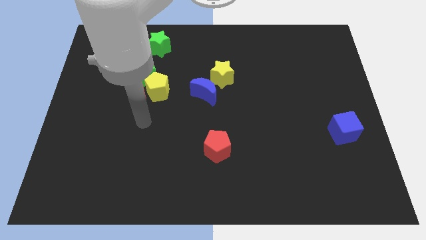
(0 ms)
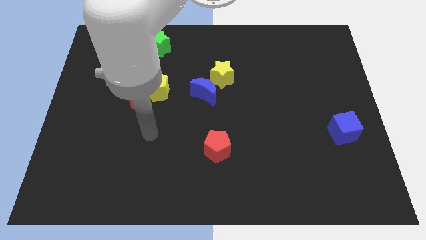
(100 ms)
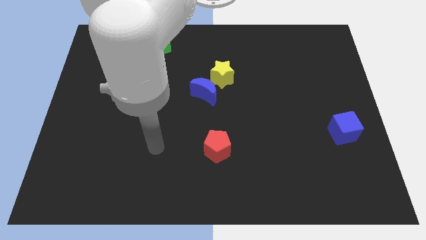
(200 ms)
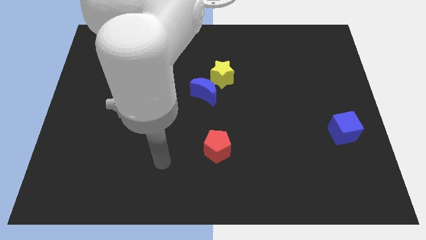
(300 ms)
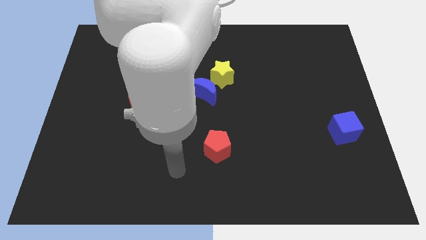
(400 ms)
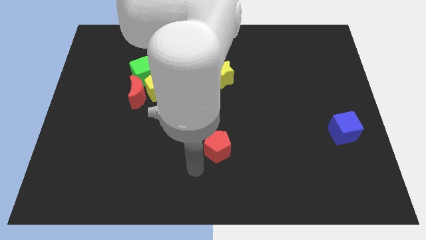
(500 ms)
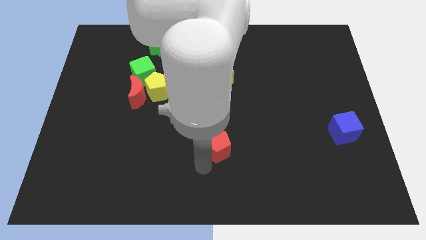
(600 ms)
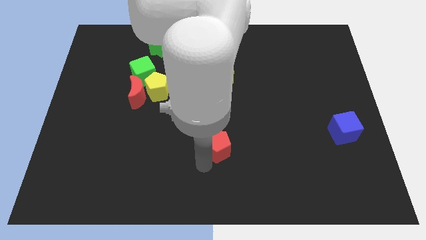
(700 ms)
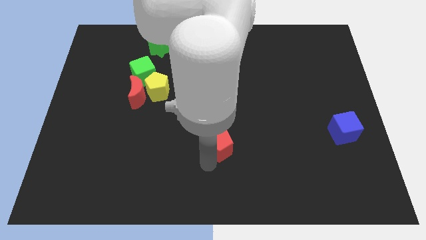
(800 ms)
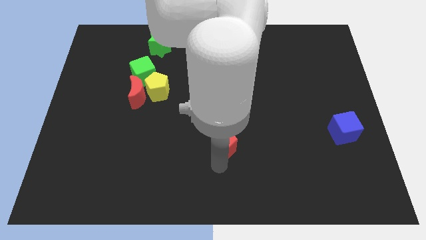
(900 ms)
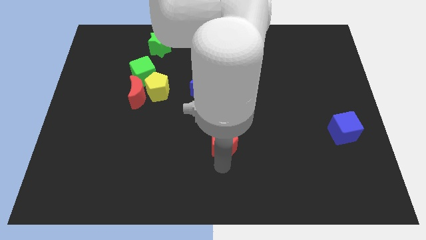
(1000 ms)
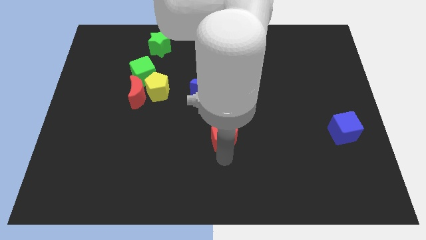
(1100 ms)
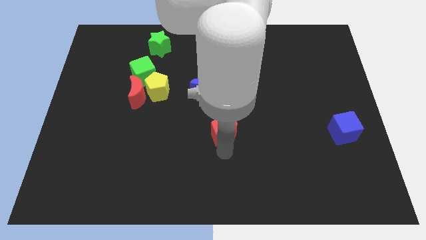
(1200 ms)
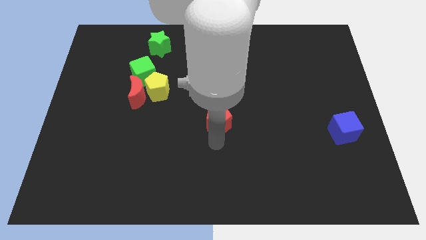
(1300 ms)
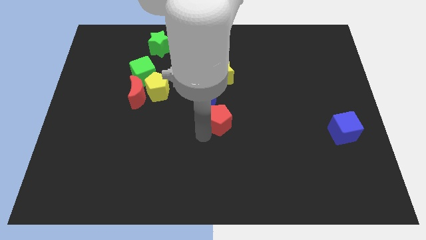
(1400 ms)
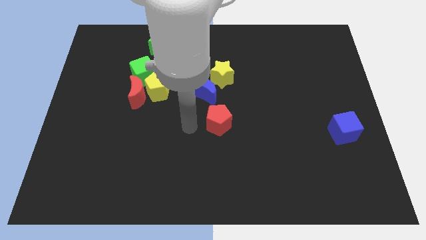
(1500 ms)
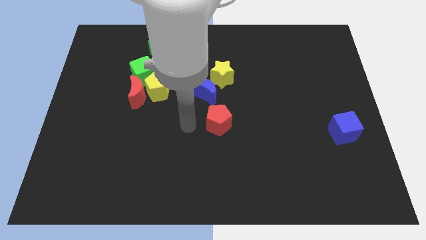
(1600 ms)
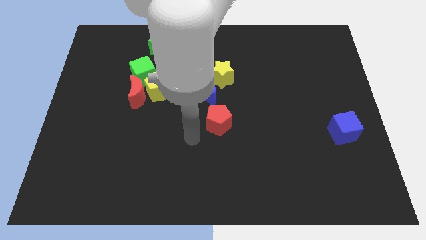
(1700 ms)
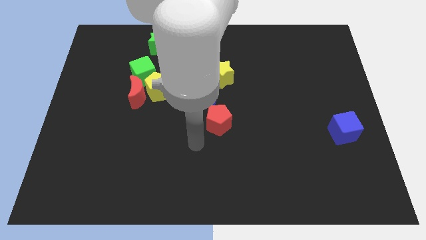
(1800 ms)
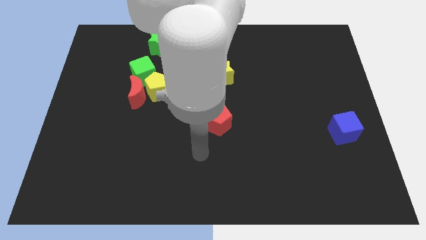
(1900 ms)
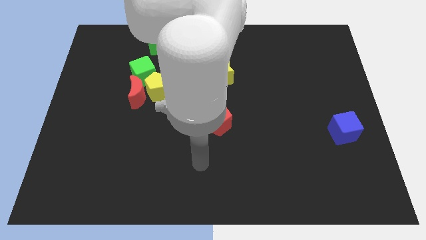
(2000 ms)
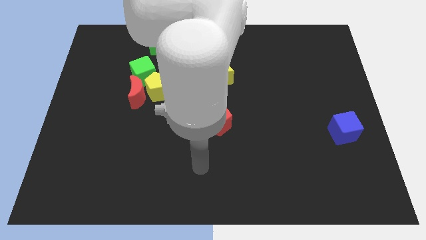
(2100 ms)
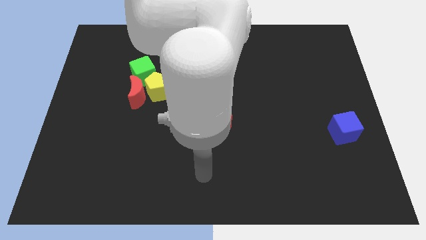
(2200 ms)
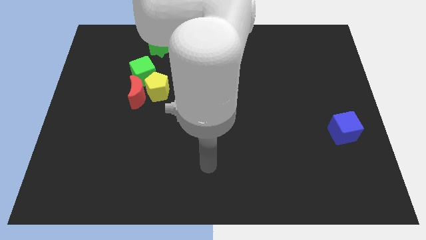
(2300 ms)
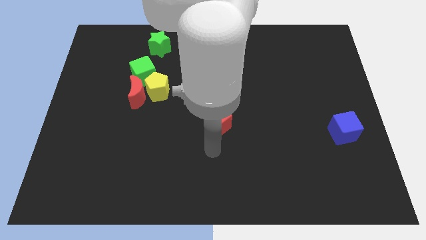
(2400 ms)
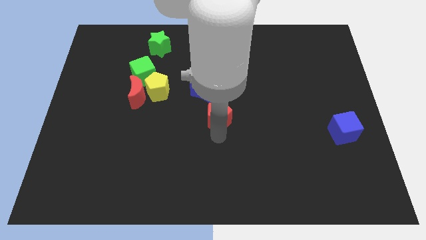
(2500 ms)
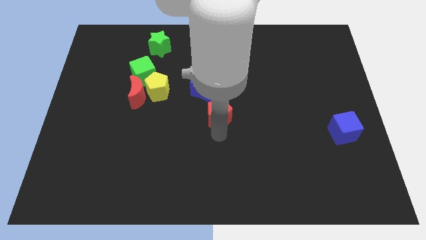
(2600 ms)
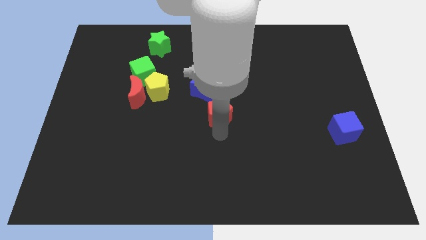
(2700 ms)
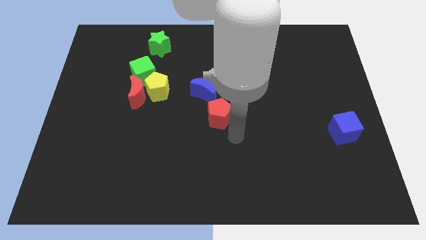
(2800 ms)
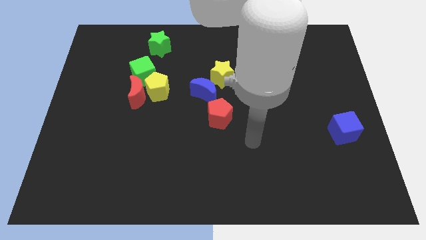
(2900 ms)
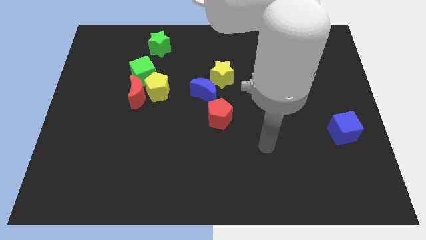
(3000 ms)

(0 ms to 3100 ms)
place the red pentagon at the center

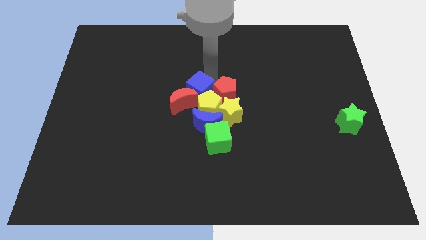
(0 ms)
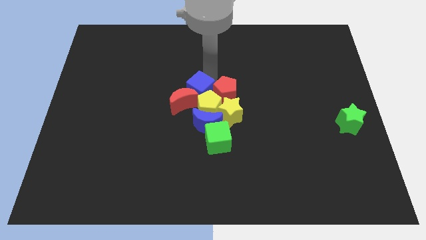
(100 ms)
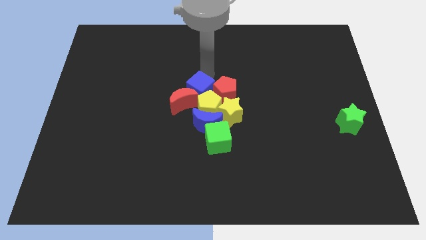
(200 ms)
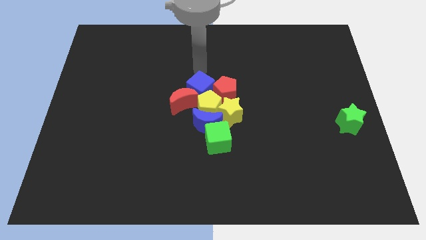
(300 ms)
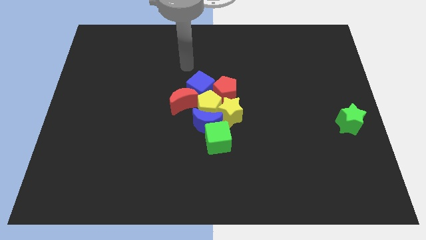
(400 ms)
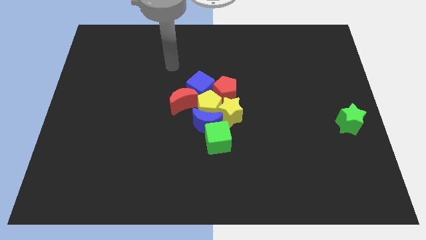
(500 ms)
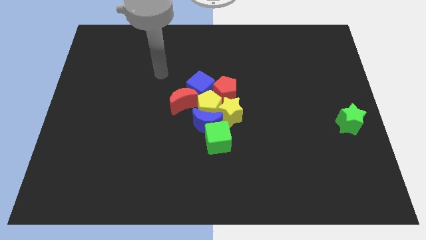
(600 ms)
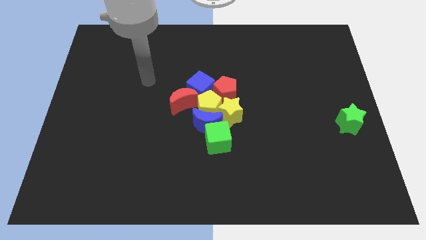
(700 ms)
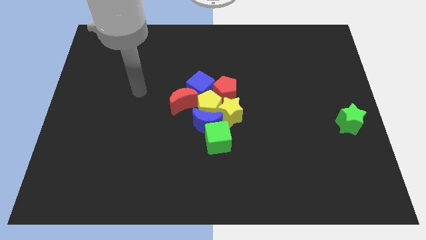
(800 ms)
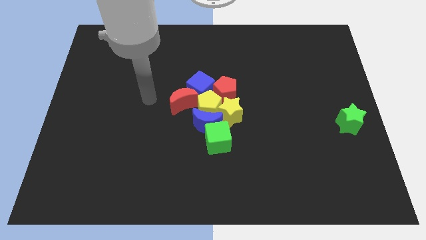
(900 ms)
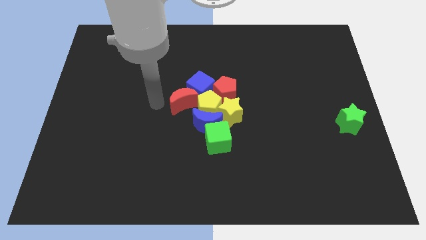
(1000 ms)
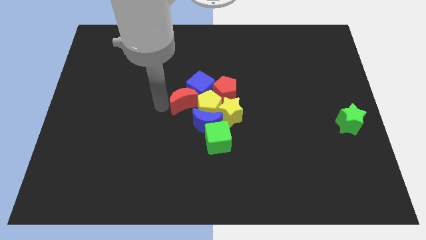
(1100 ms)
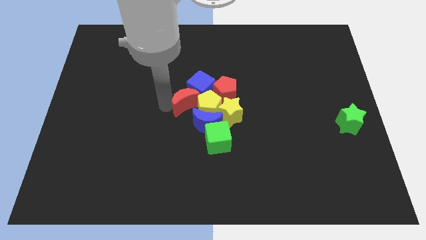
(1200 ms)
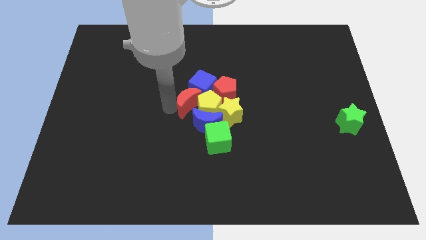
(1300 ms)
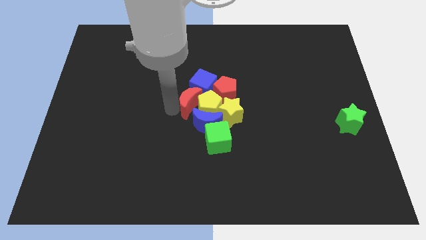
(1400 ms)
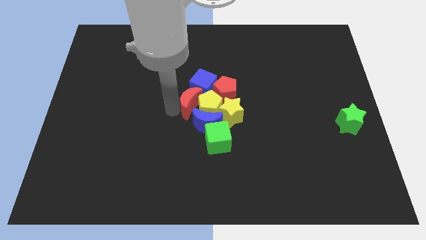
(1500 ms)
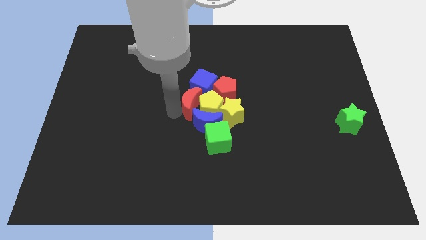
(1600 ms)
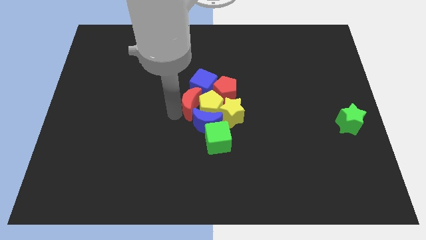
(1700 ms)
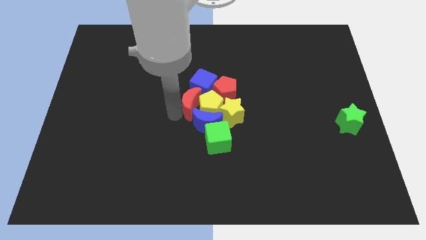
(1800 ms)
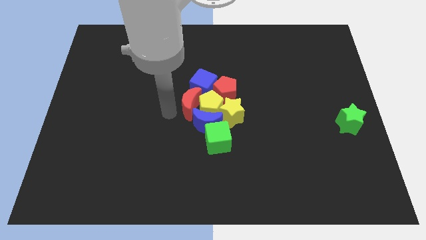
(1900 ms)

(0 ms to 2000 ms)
move the red crescent into the group of blocks

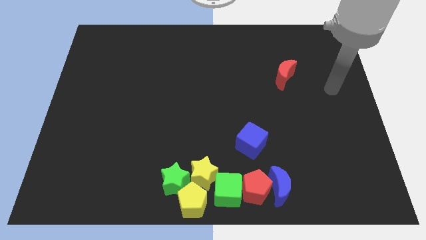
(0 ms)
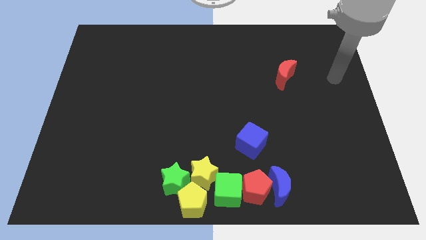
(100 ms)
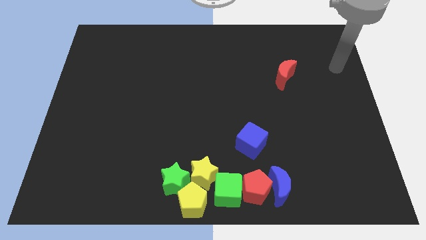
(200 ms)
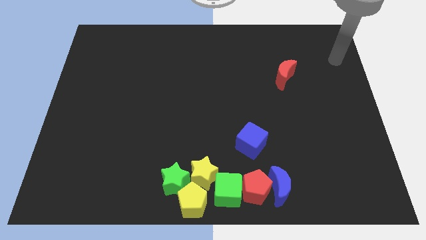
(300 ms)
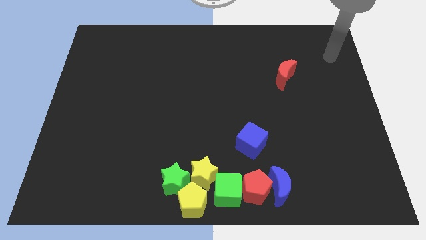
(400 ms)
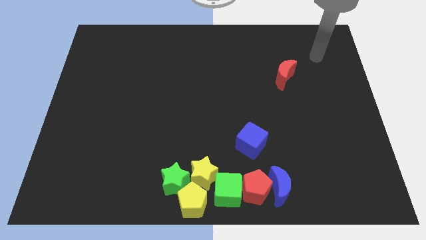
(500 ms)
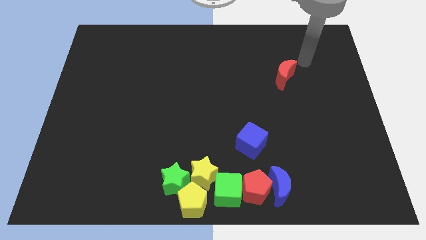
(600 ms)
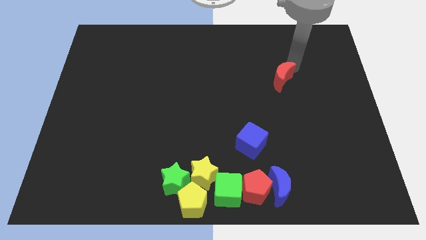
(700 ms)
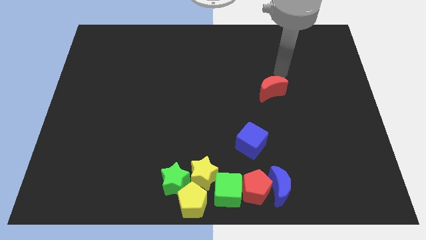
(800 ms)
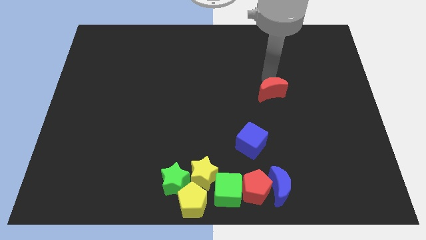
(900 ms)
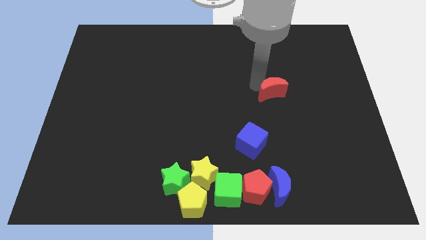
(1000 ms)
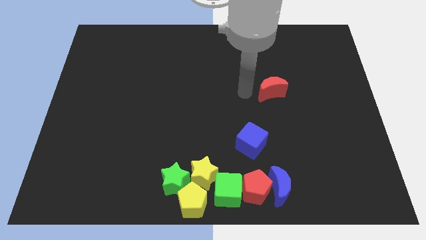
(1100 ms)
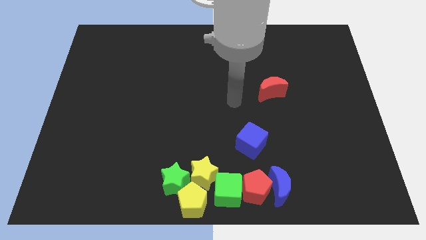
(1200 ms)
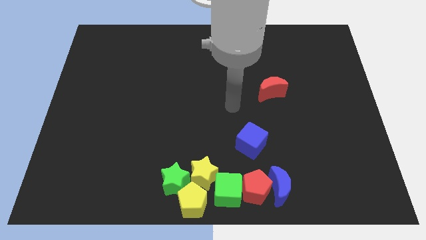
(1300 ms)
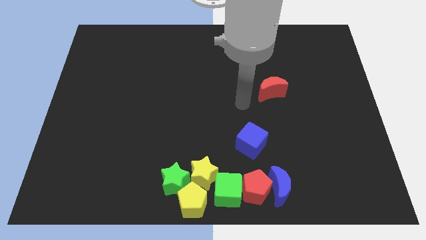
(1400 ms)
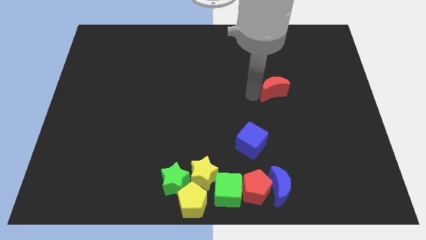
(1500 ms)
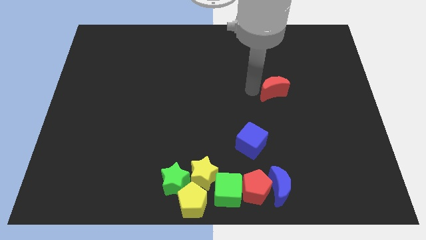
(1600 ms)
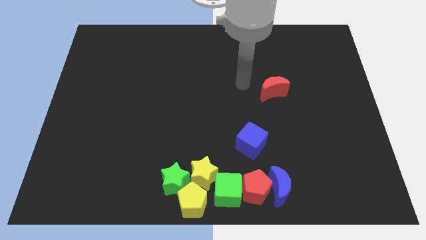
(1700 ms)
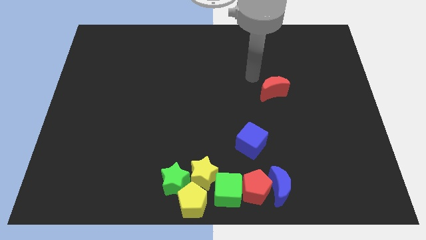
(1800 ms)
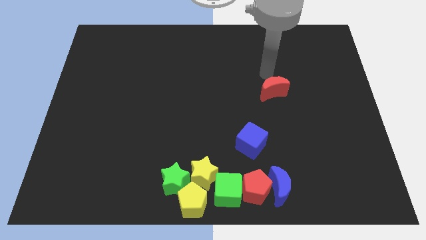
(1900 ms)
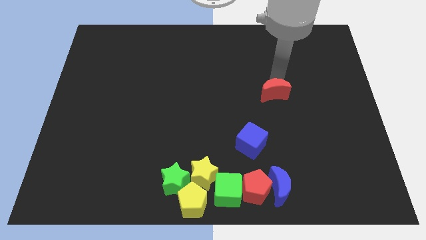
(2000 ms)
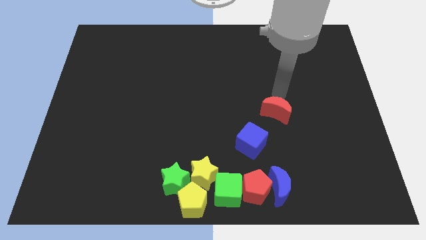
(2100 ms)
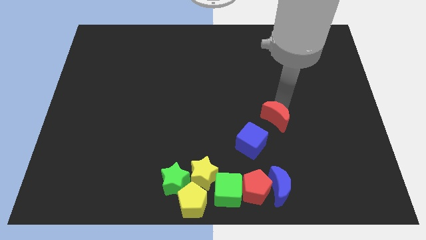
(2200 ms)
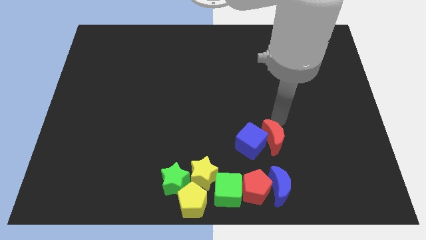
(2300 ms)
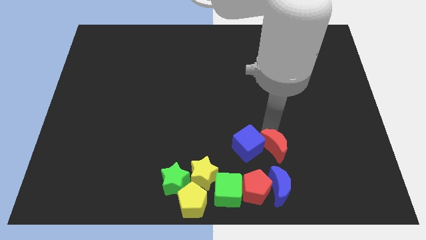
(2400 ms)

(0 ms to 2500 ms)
place red crescent to the right of blue cube

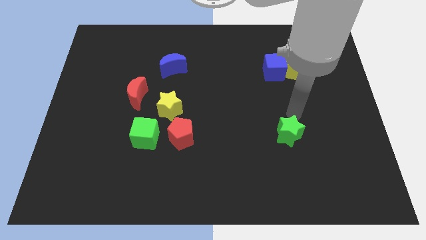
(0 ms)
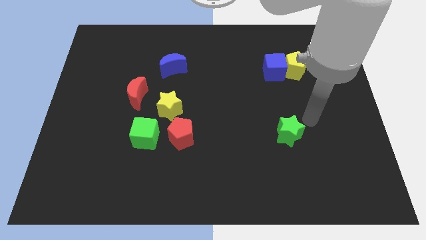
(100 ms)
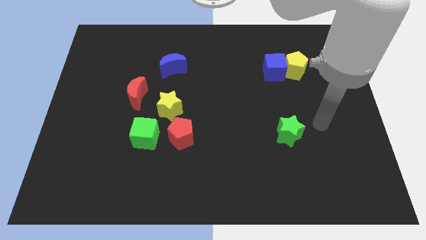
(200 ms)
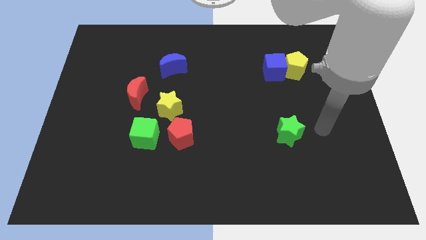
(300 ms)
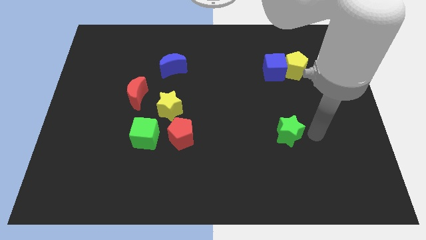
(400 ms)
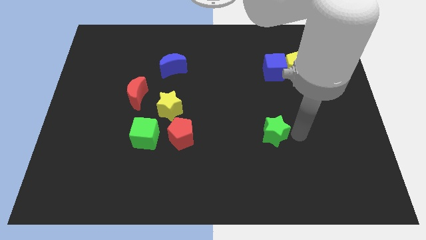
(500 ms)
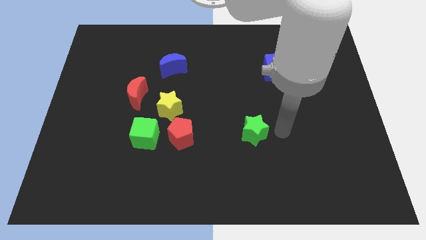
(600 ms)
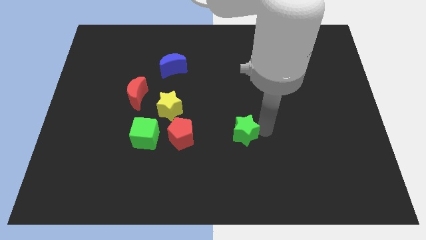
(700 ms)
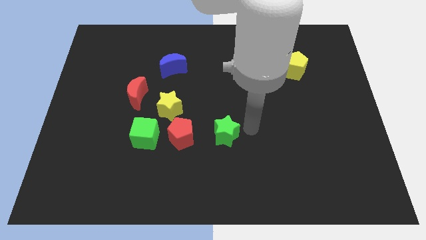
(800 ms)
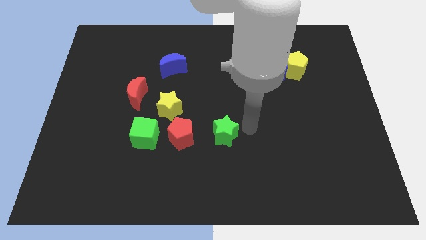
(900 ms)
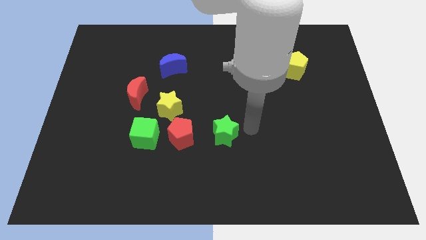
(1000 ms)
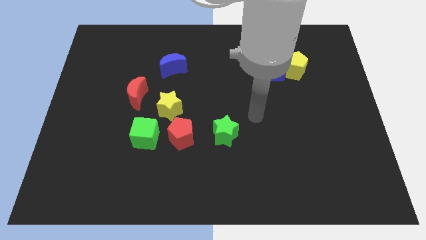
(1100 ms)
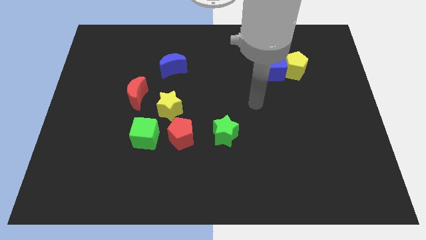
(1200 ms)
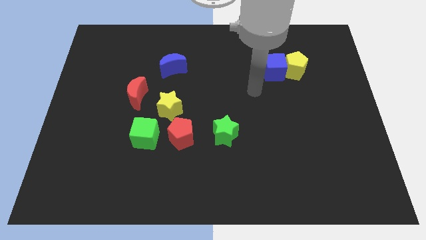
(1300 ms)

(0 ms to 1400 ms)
push the green star to the left of the red pentagon

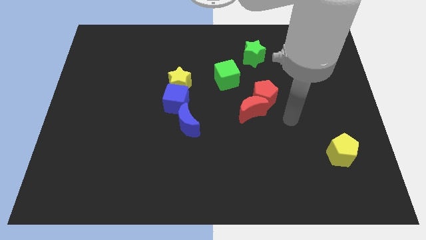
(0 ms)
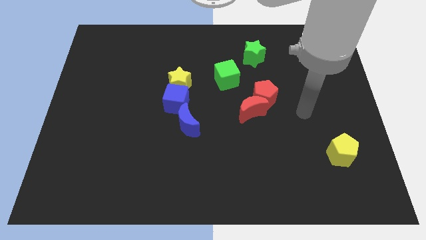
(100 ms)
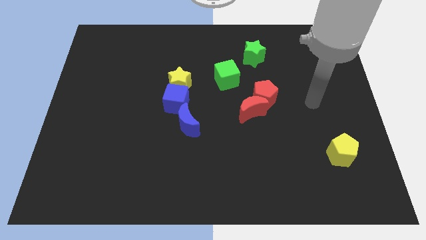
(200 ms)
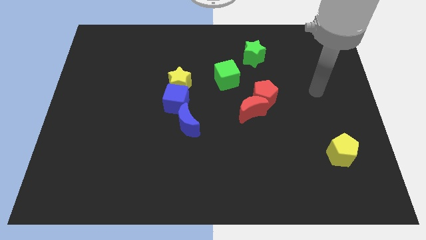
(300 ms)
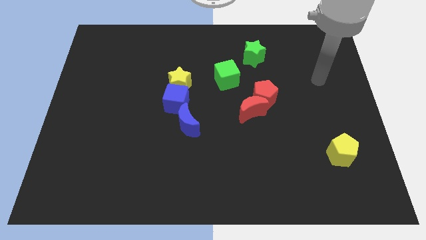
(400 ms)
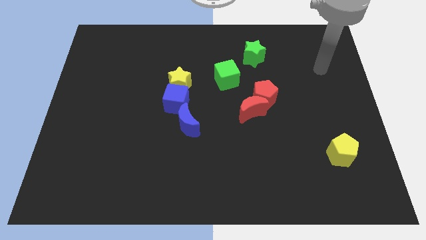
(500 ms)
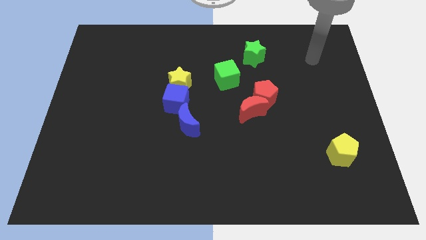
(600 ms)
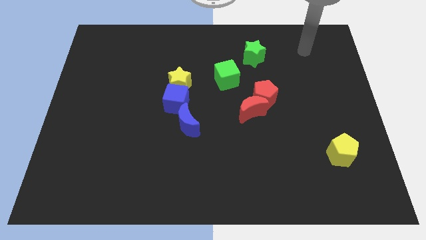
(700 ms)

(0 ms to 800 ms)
move the arm towards the top right corner
